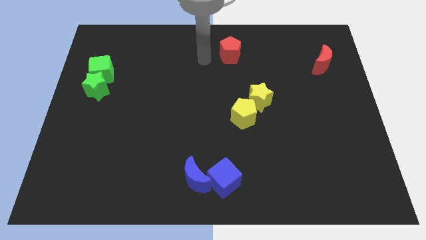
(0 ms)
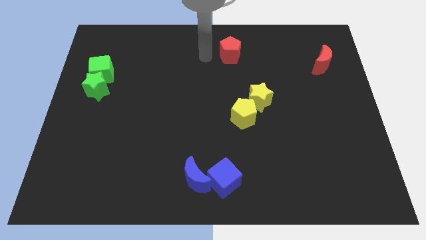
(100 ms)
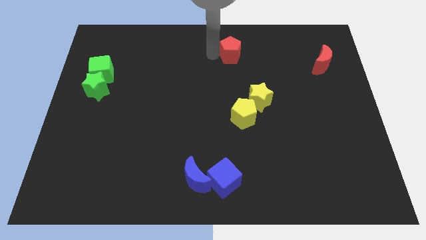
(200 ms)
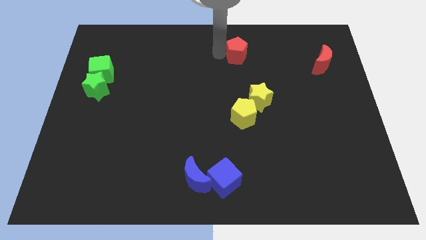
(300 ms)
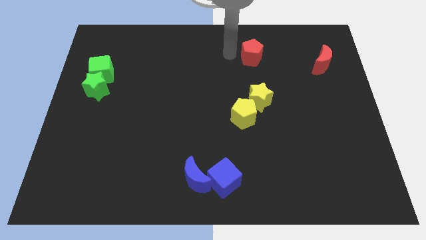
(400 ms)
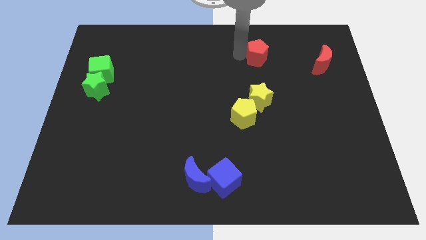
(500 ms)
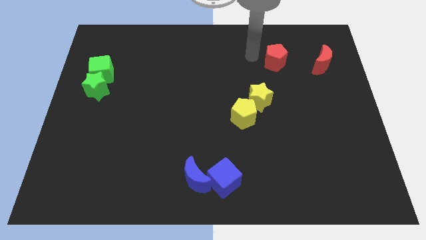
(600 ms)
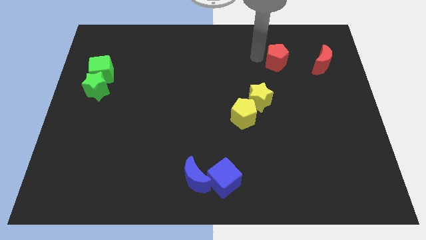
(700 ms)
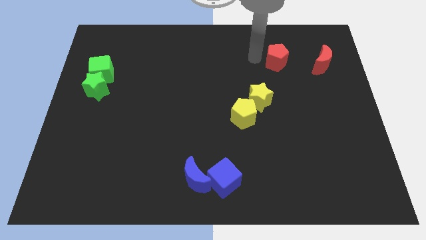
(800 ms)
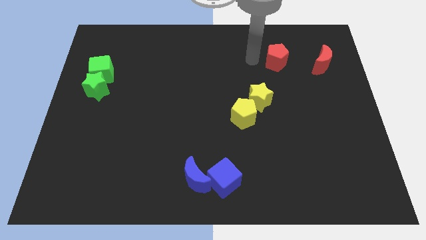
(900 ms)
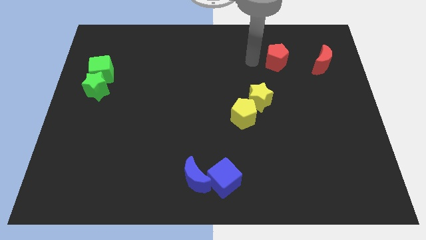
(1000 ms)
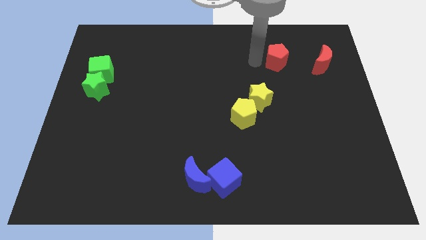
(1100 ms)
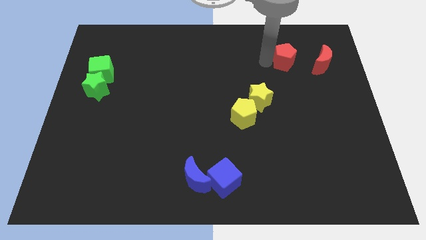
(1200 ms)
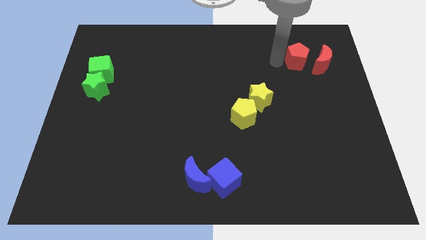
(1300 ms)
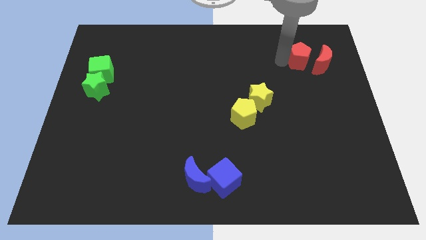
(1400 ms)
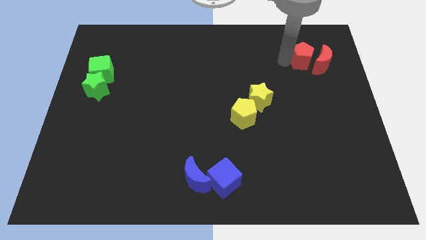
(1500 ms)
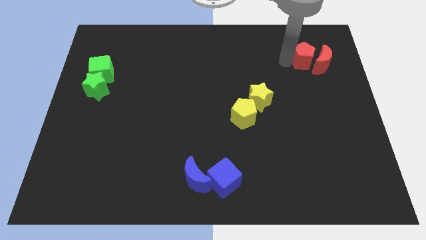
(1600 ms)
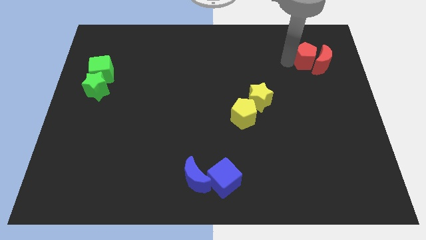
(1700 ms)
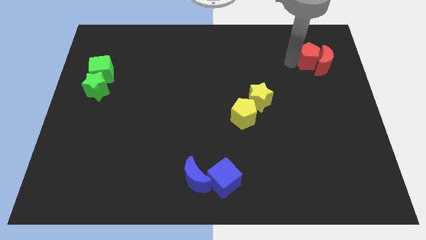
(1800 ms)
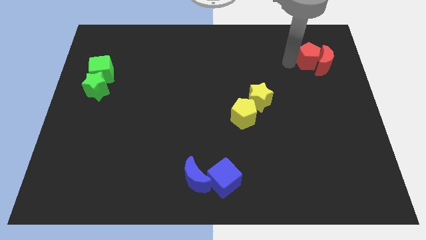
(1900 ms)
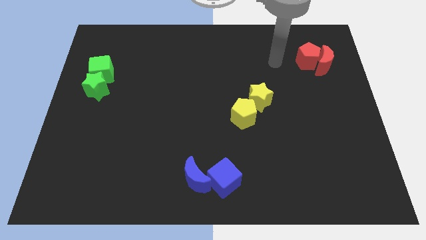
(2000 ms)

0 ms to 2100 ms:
push the red pentagon into red crescent

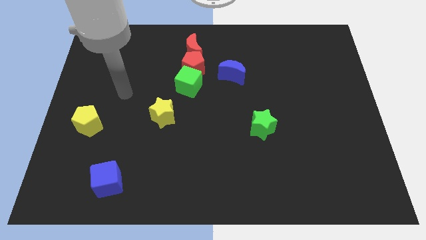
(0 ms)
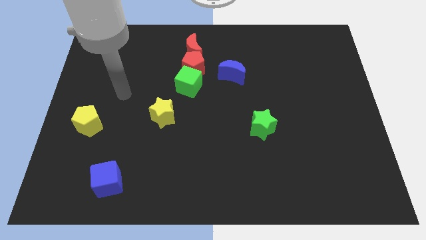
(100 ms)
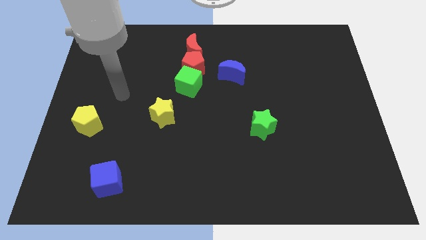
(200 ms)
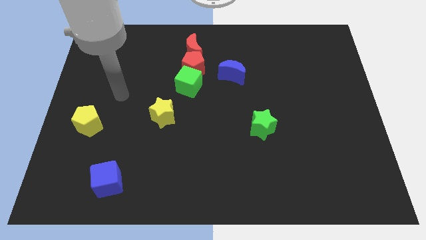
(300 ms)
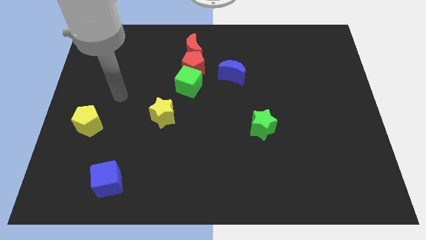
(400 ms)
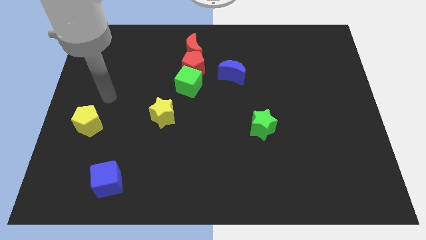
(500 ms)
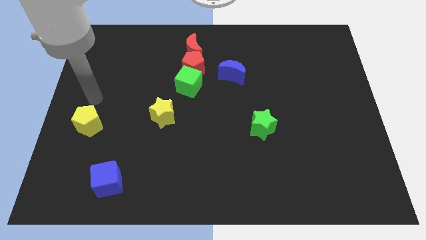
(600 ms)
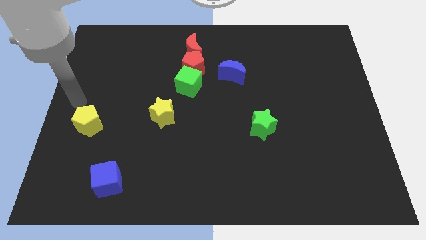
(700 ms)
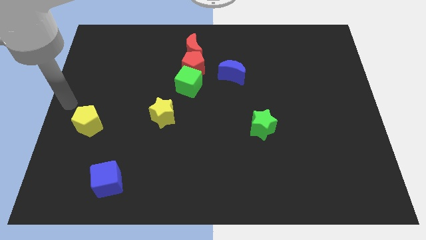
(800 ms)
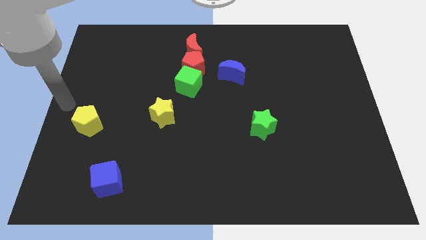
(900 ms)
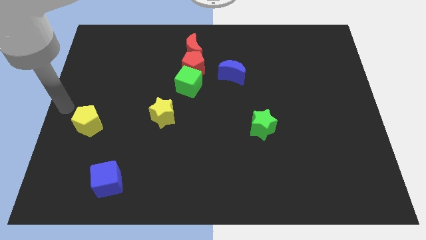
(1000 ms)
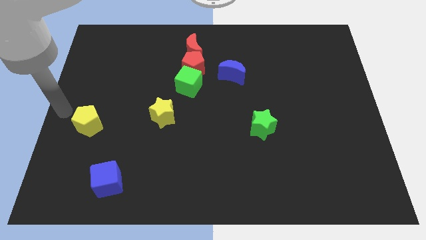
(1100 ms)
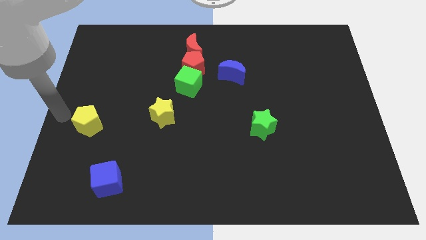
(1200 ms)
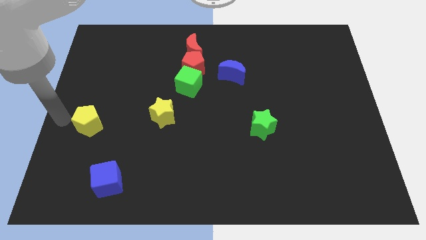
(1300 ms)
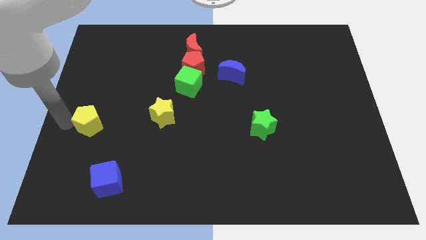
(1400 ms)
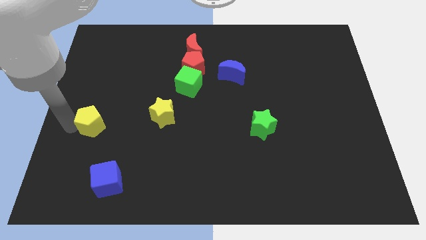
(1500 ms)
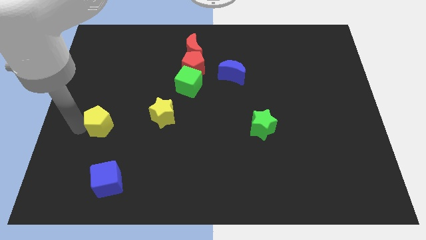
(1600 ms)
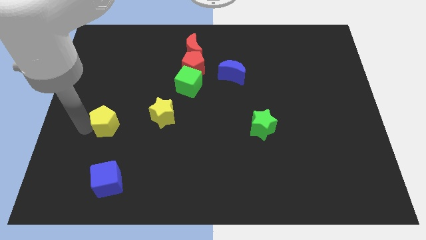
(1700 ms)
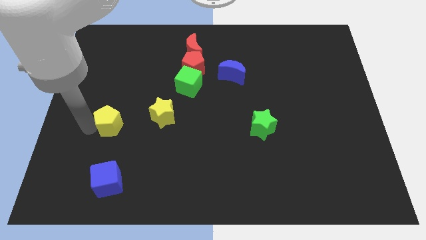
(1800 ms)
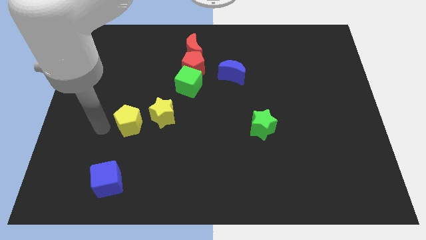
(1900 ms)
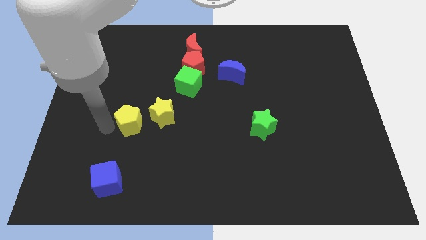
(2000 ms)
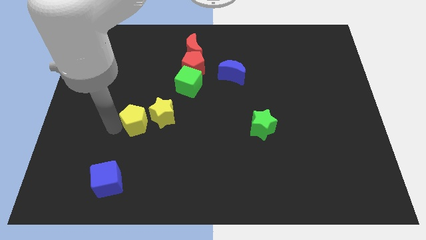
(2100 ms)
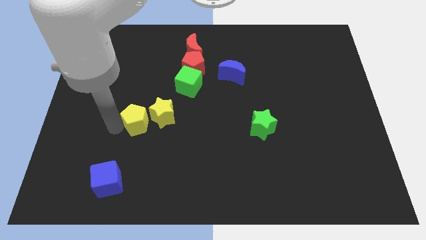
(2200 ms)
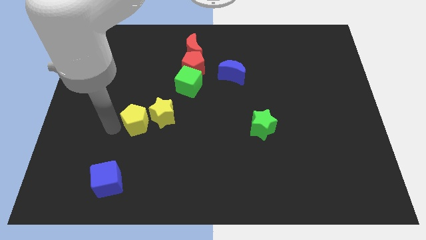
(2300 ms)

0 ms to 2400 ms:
push the yellow pentagon to the left of yellow star

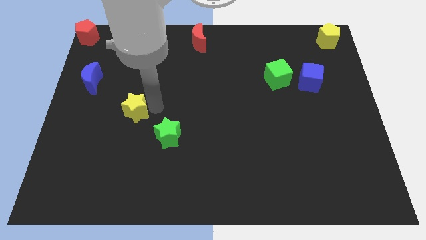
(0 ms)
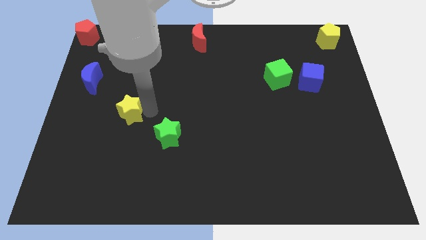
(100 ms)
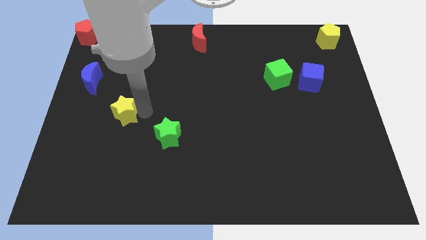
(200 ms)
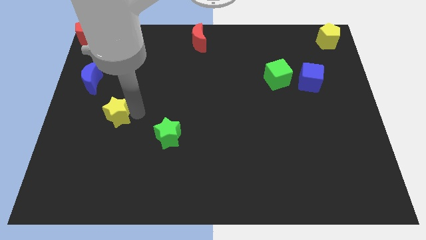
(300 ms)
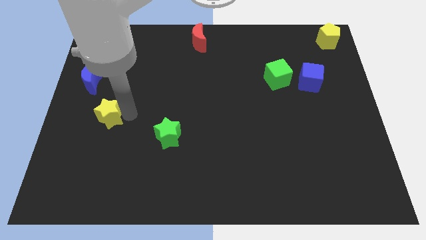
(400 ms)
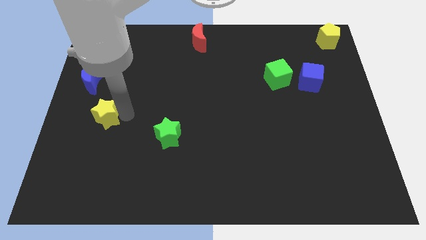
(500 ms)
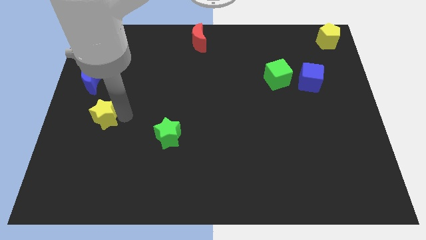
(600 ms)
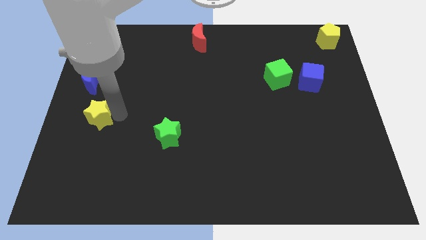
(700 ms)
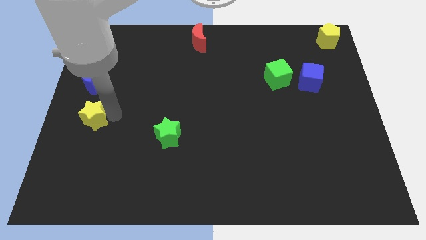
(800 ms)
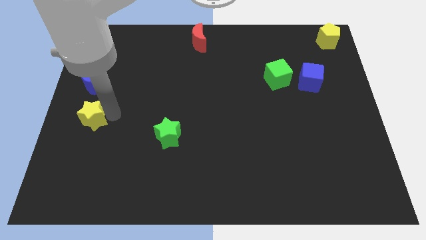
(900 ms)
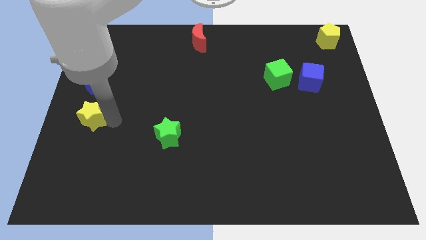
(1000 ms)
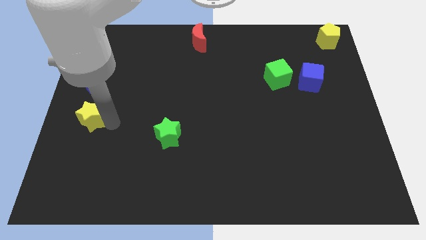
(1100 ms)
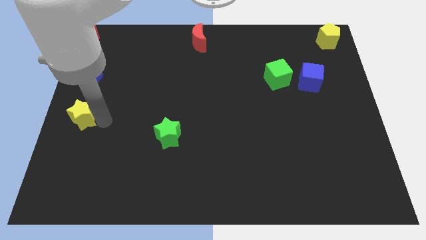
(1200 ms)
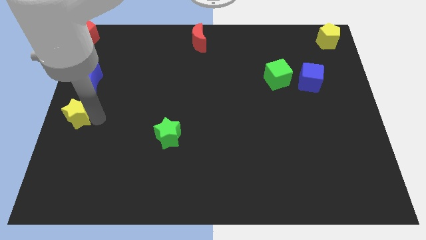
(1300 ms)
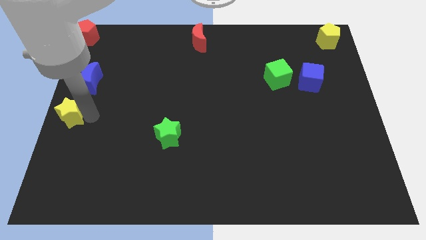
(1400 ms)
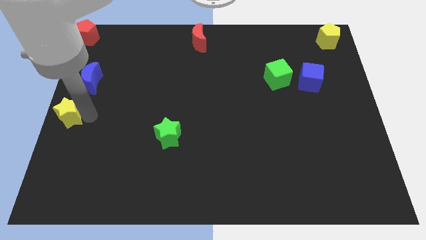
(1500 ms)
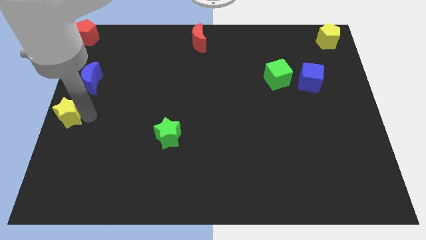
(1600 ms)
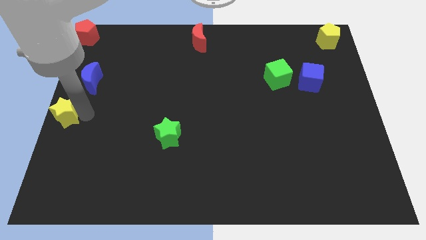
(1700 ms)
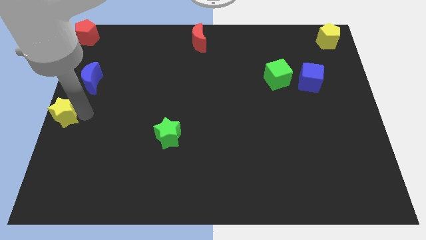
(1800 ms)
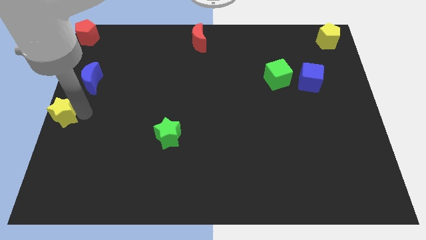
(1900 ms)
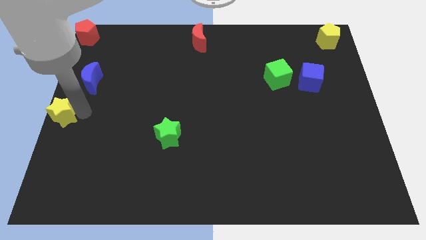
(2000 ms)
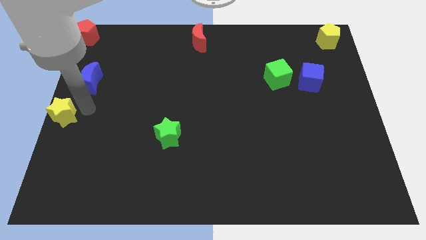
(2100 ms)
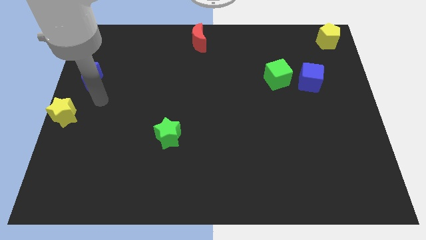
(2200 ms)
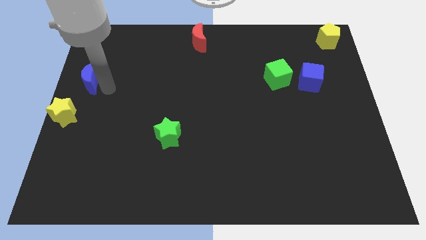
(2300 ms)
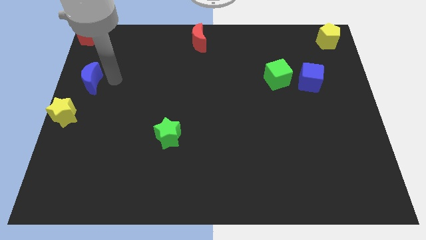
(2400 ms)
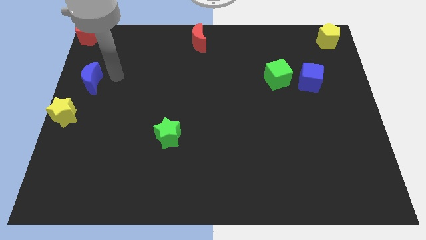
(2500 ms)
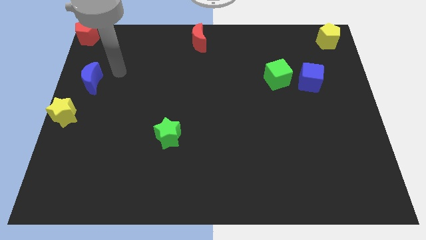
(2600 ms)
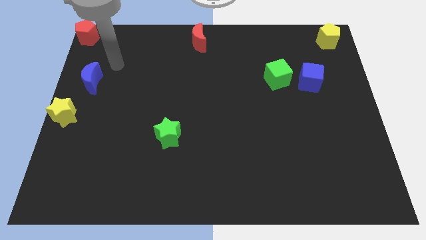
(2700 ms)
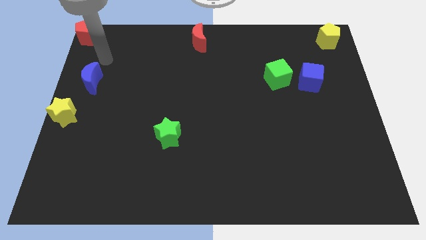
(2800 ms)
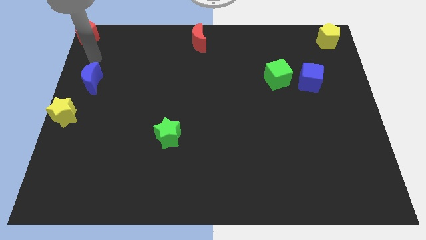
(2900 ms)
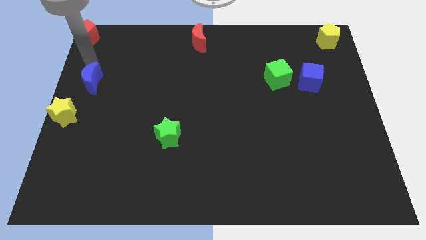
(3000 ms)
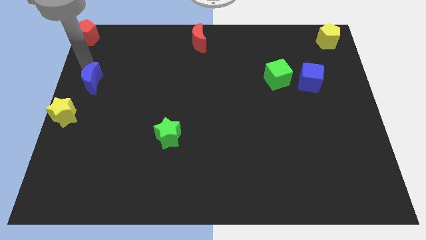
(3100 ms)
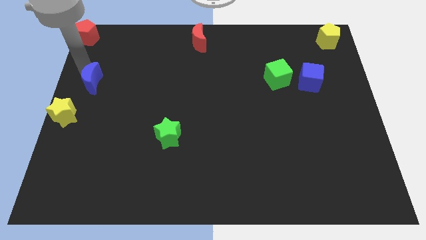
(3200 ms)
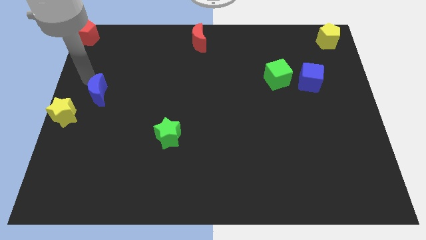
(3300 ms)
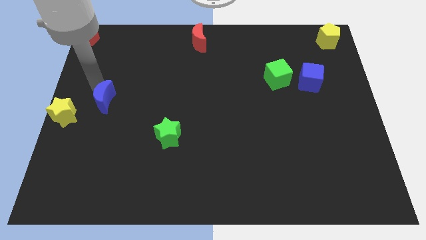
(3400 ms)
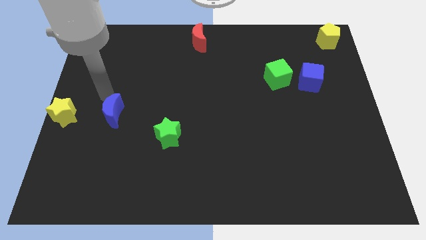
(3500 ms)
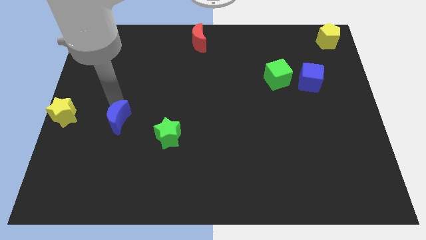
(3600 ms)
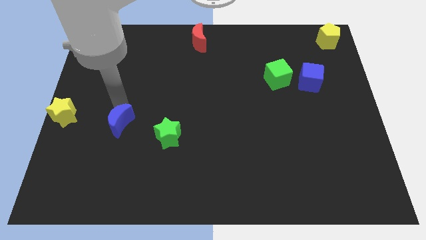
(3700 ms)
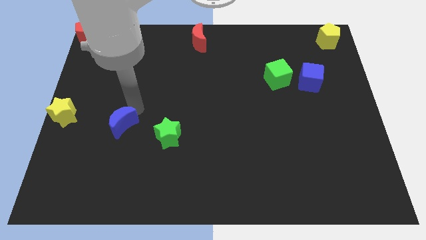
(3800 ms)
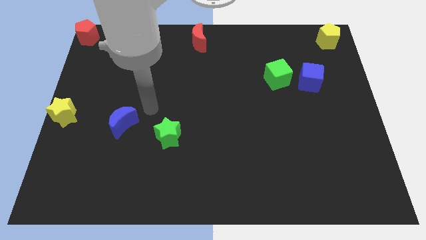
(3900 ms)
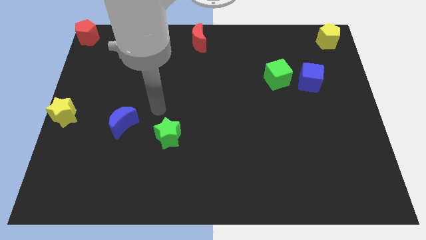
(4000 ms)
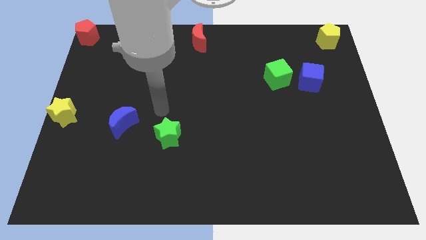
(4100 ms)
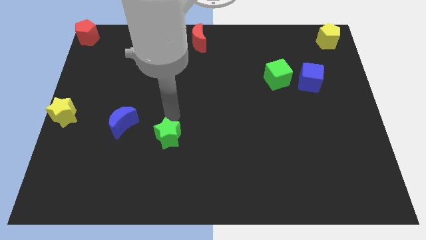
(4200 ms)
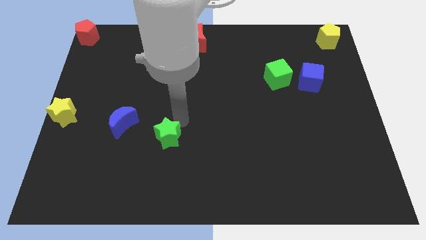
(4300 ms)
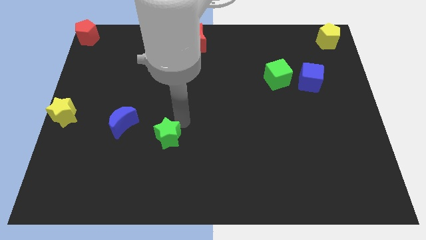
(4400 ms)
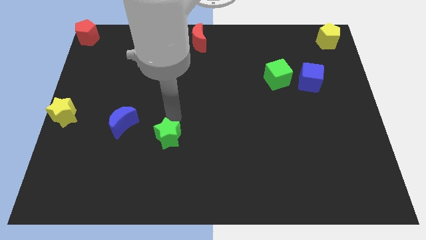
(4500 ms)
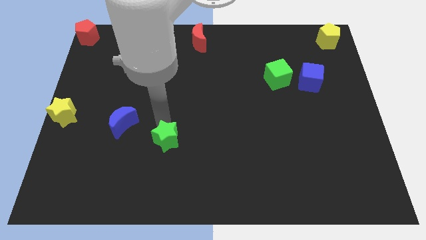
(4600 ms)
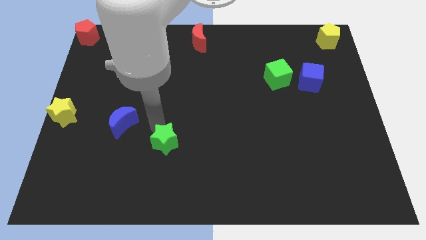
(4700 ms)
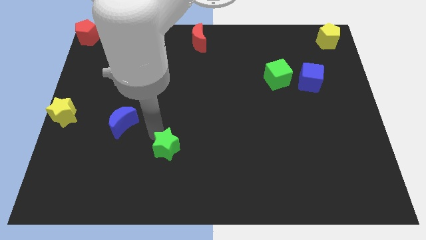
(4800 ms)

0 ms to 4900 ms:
move the yellow star to the left center of the board
